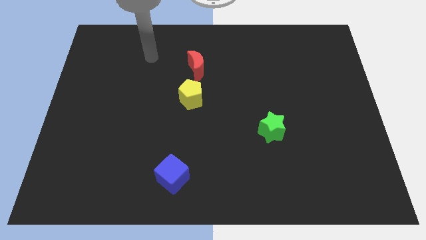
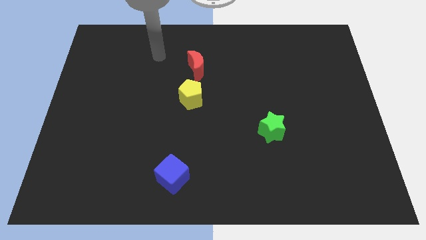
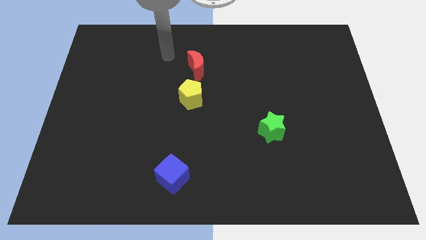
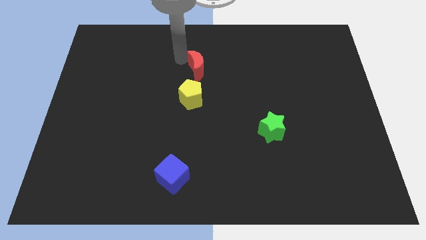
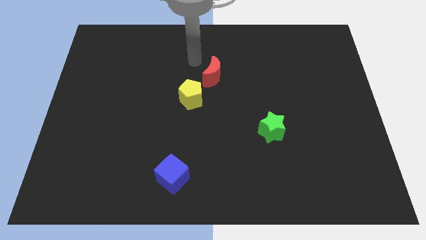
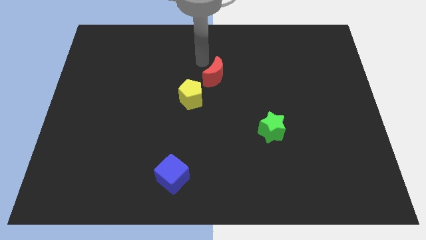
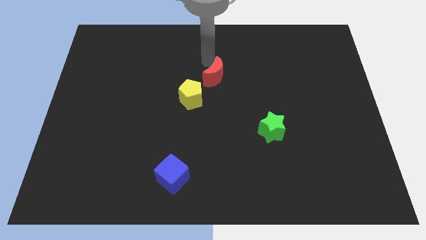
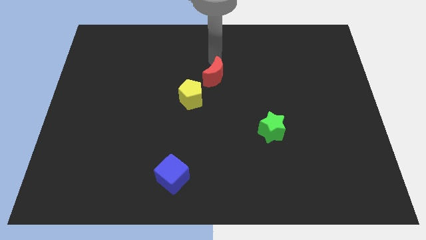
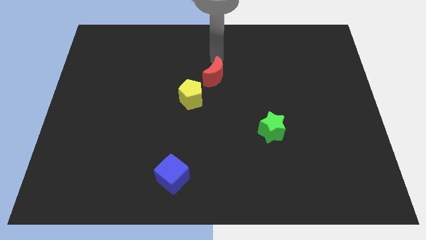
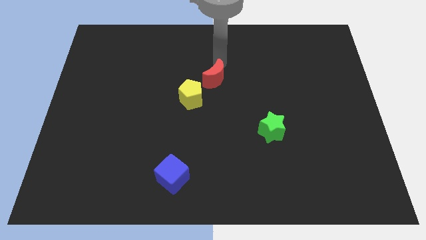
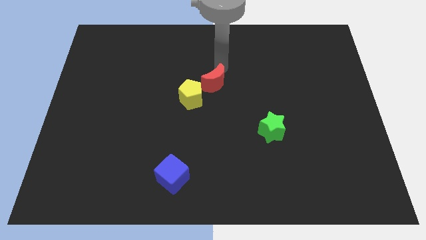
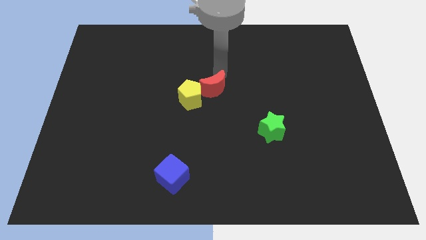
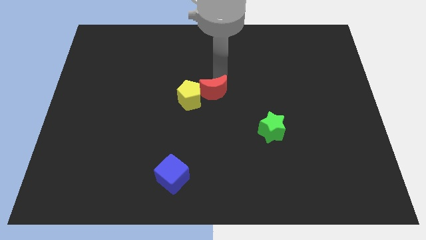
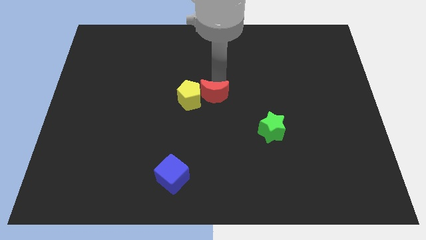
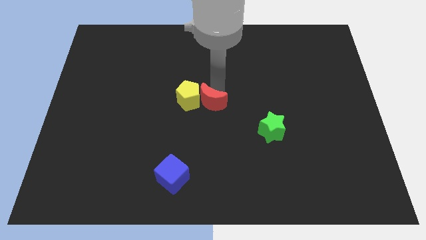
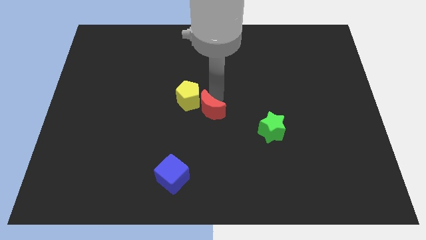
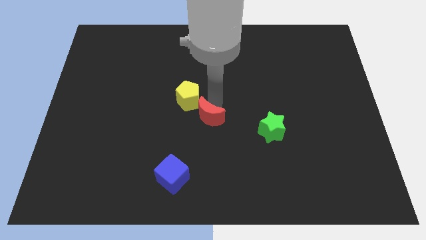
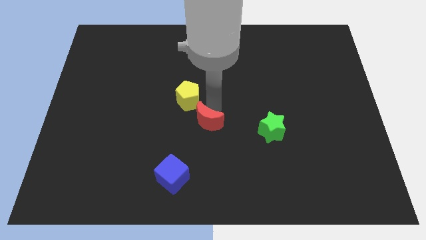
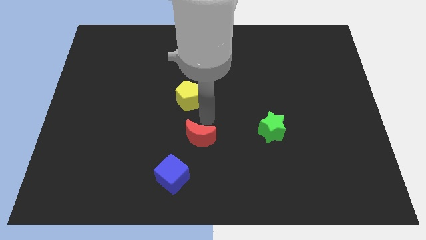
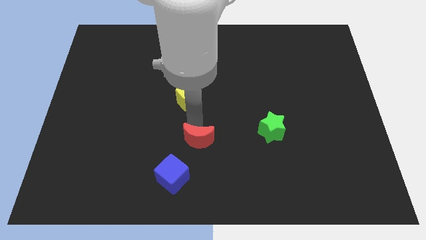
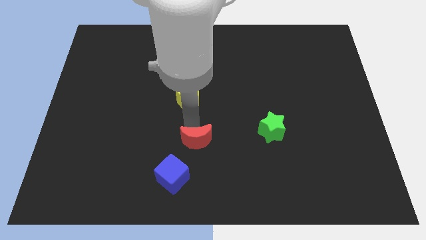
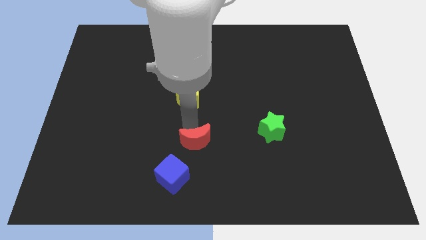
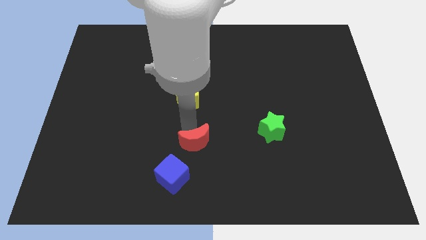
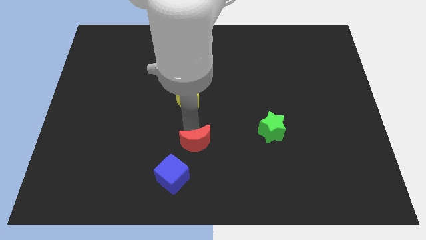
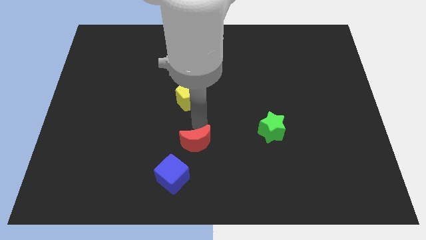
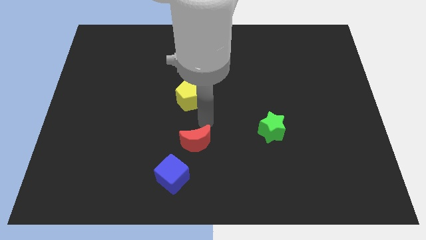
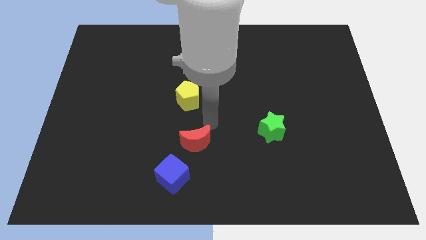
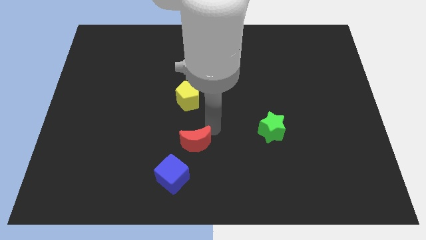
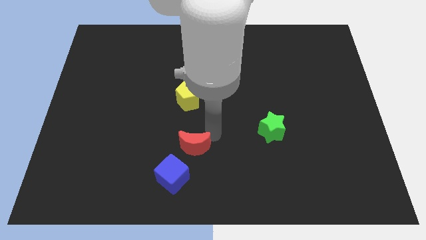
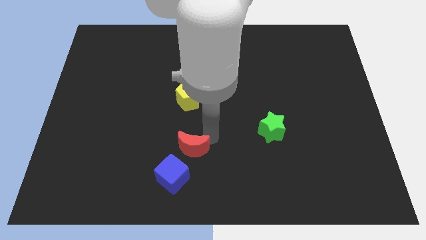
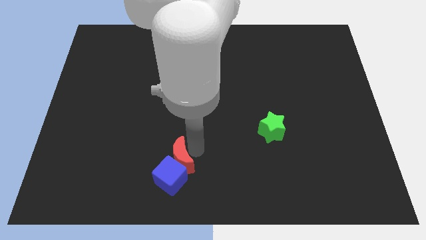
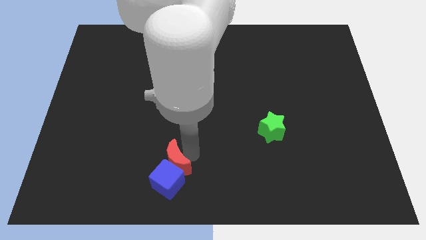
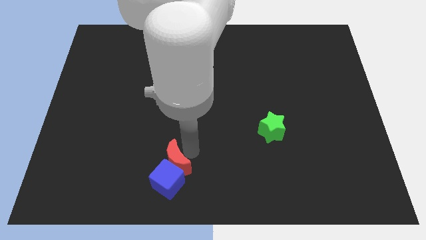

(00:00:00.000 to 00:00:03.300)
push the red moon close to the blue block

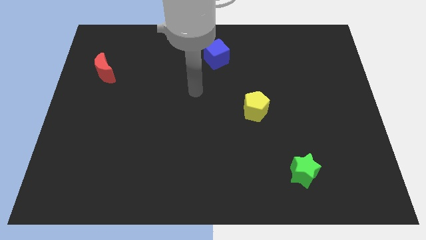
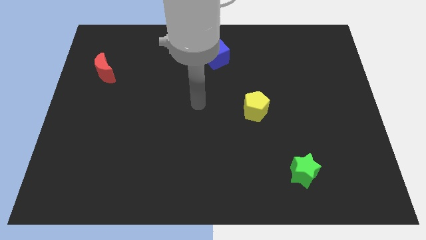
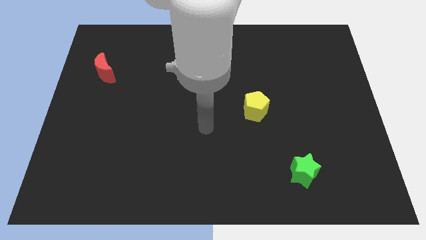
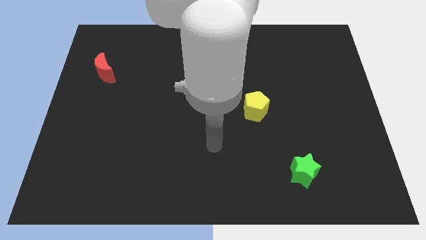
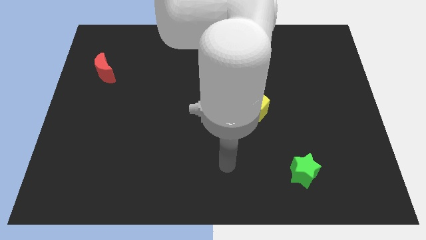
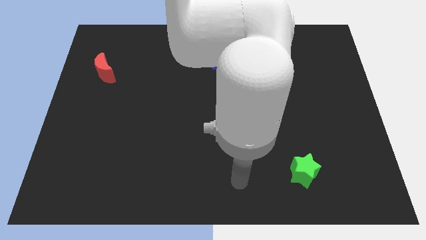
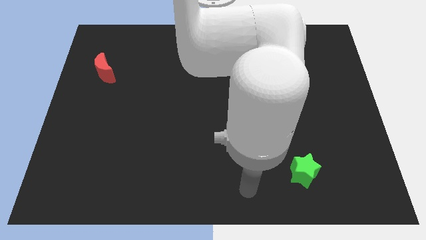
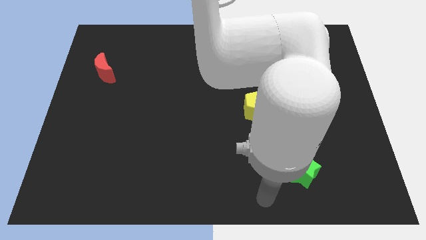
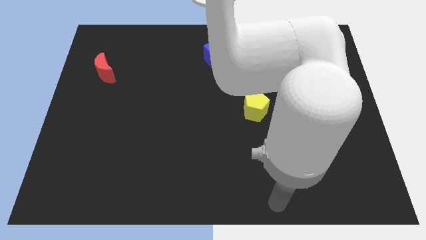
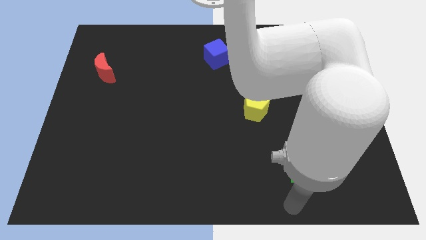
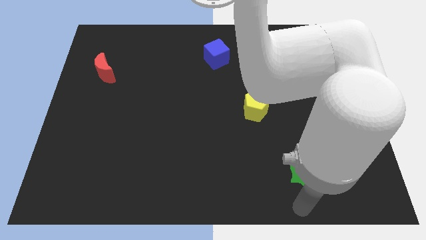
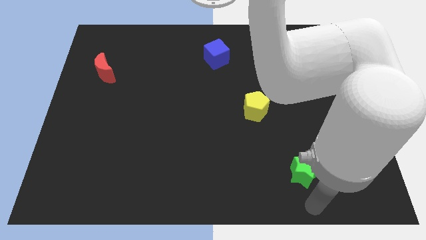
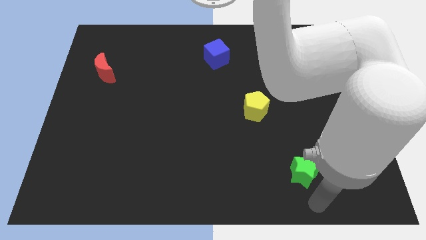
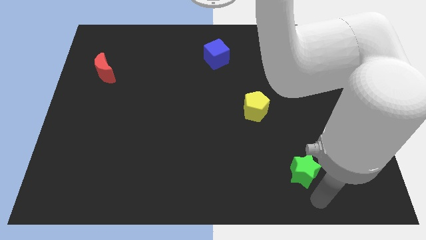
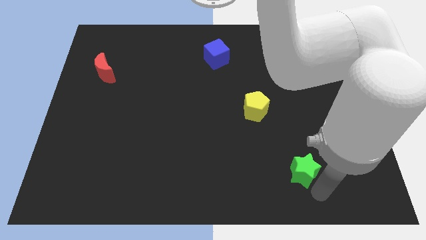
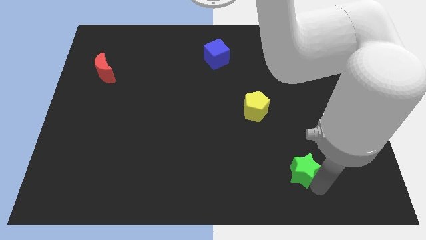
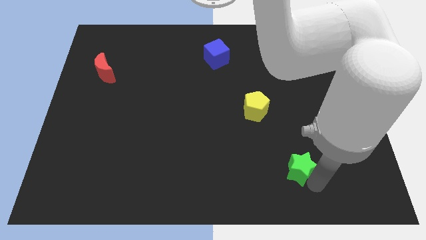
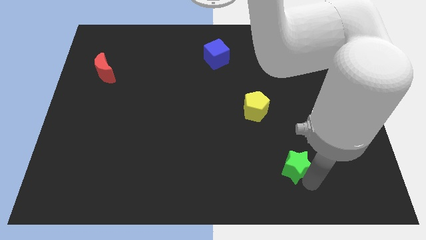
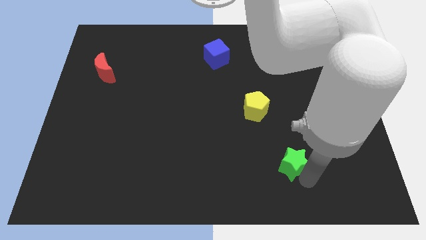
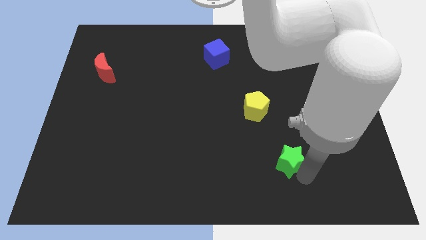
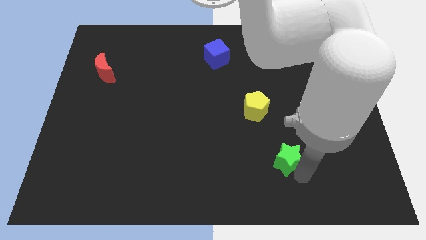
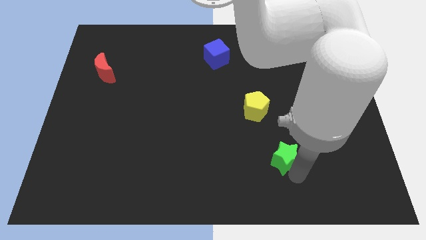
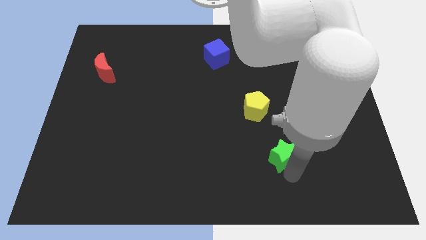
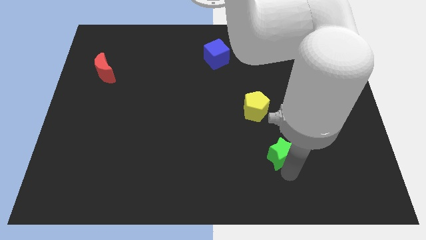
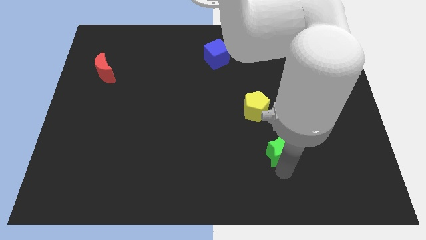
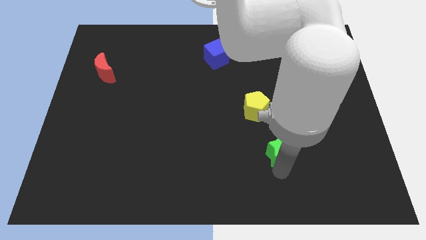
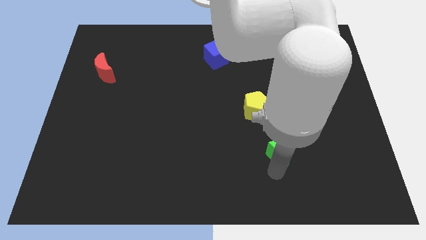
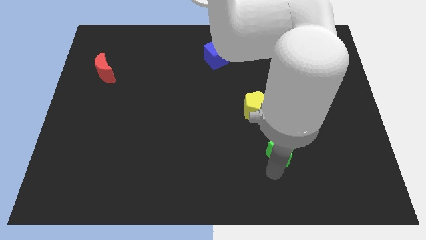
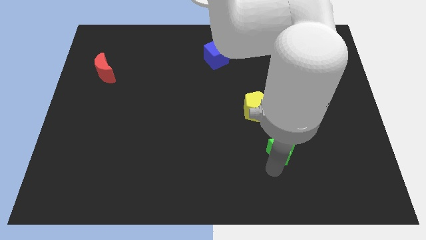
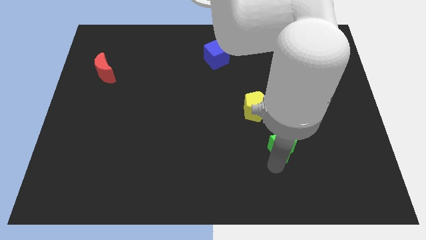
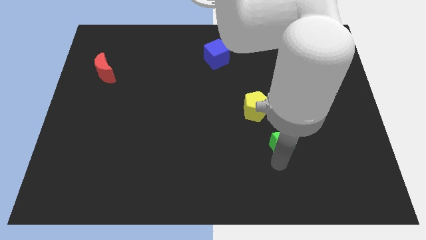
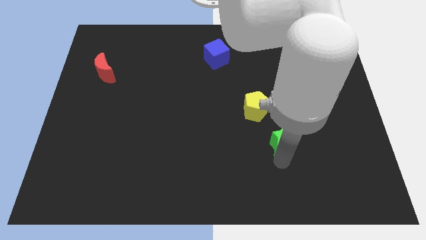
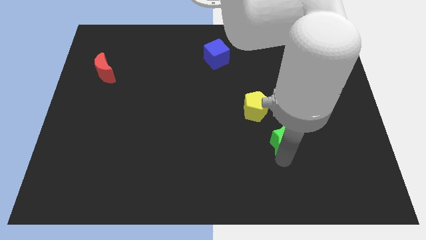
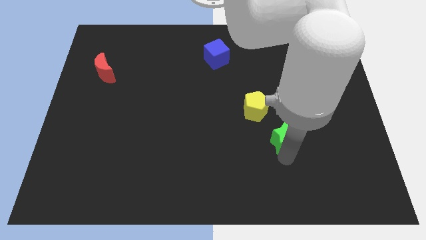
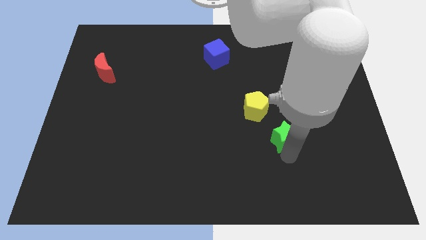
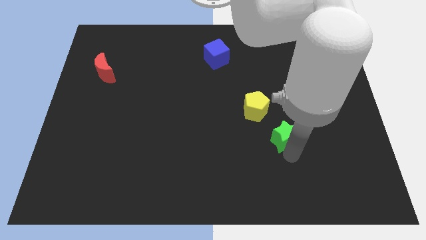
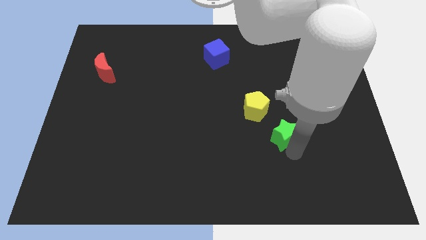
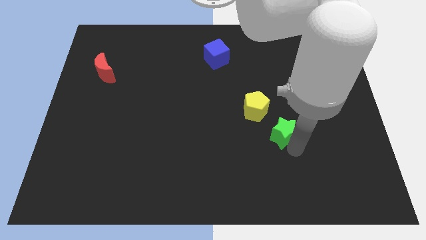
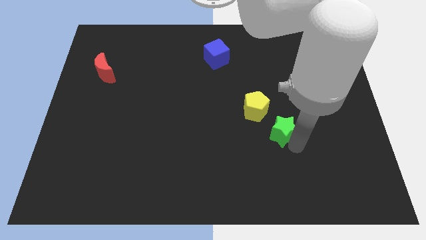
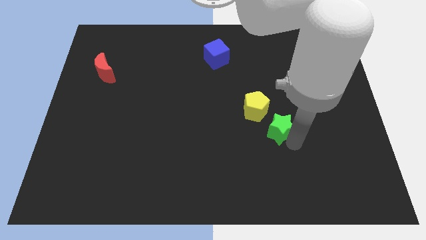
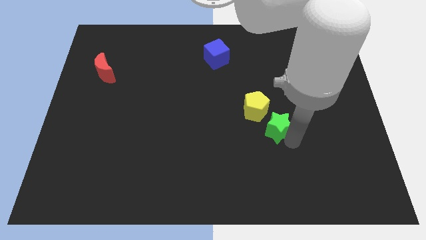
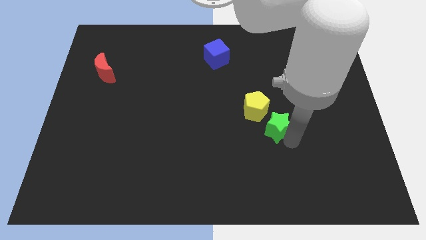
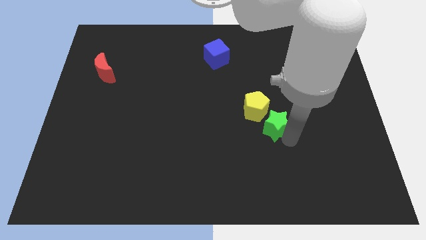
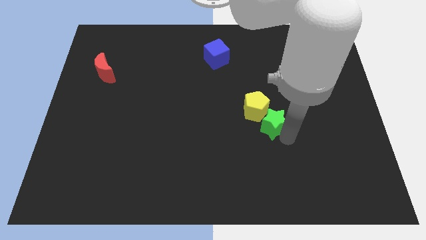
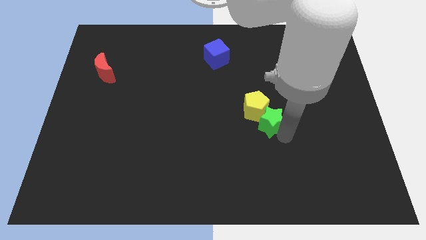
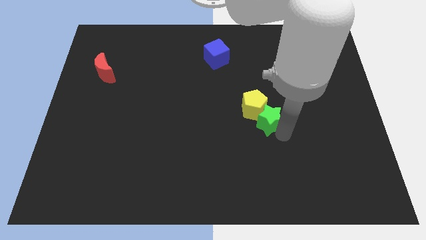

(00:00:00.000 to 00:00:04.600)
slide the green block close to the yellow block

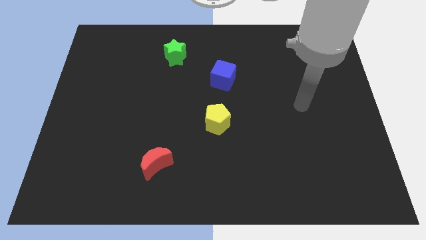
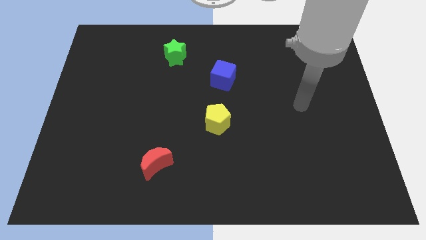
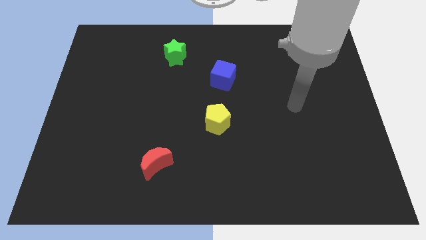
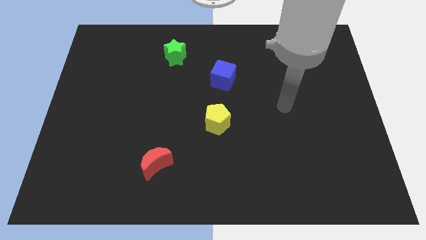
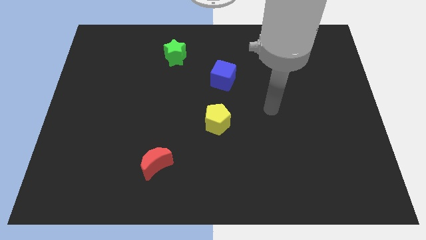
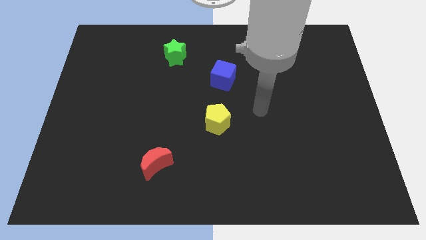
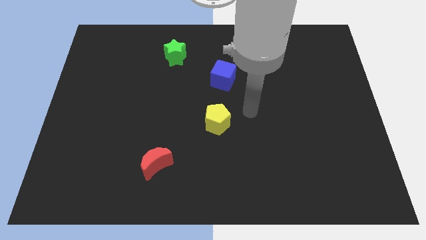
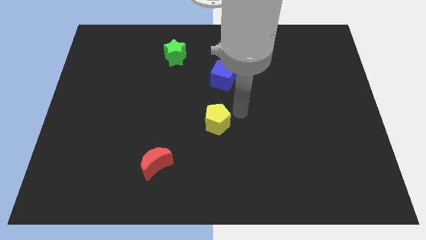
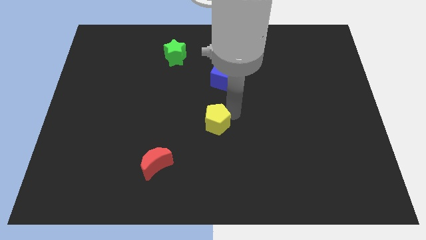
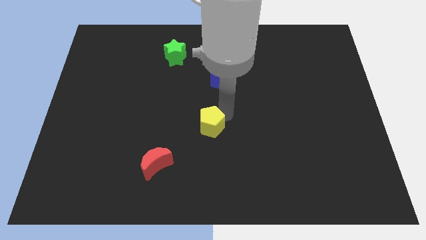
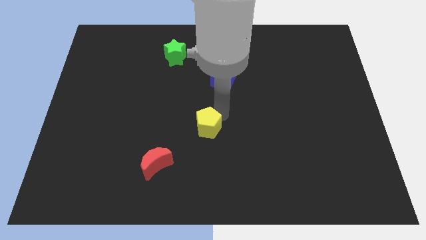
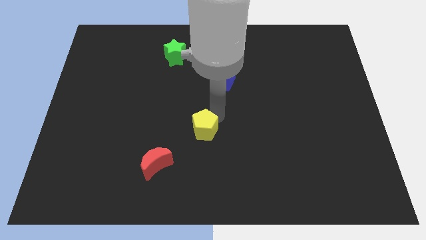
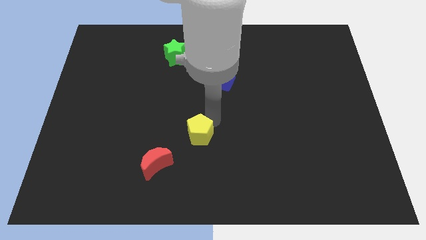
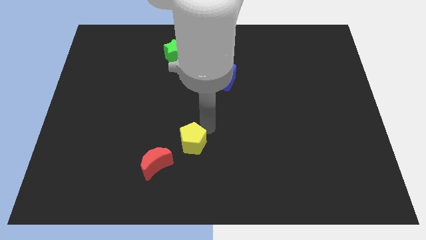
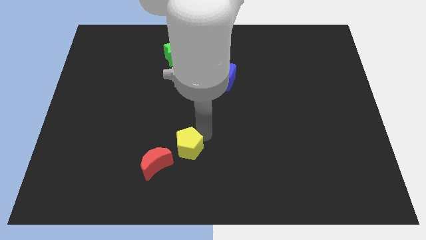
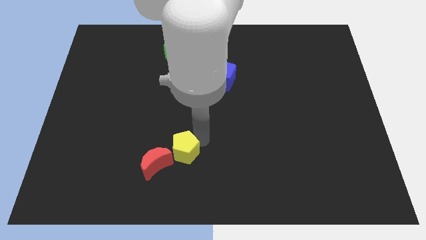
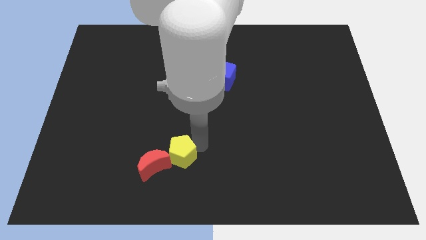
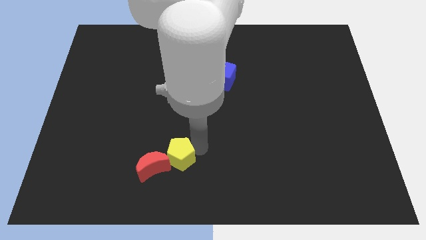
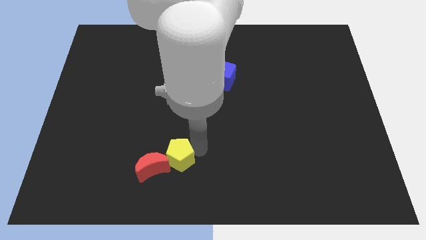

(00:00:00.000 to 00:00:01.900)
push the yellow block close to the red moon
